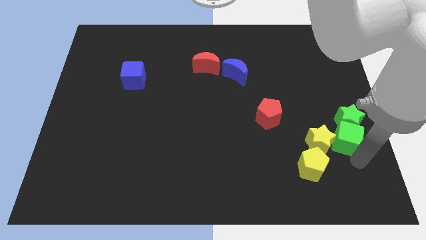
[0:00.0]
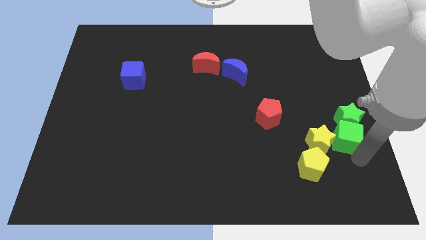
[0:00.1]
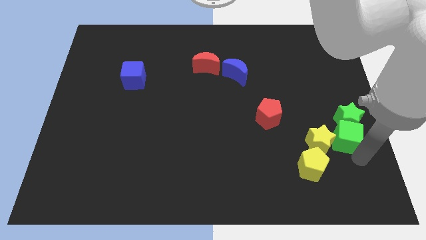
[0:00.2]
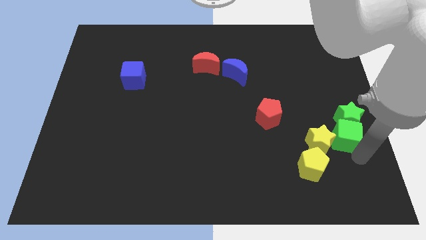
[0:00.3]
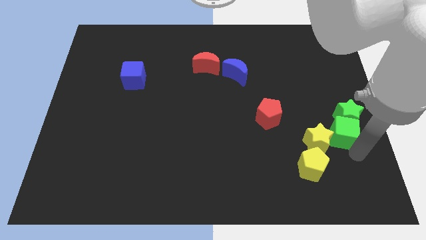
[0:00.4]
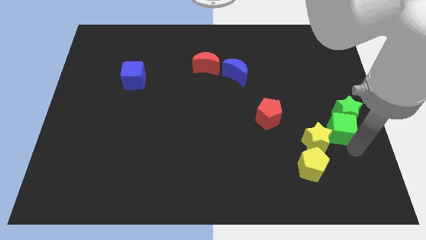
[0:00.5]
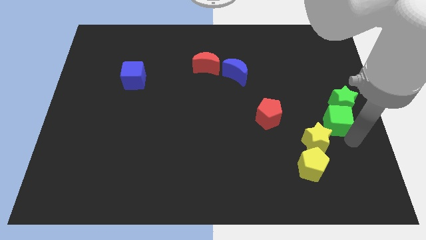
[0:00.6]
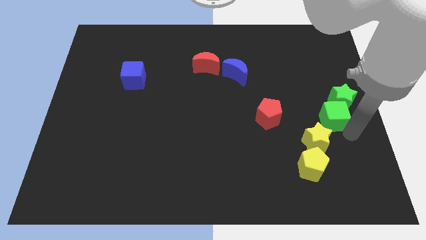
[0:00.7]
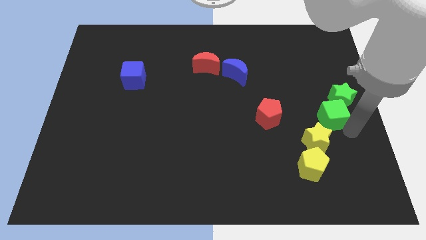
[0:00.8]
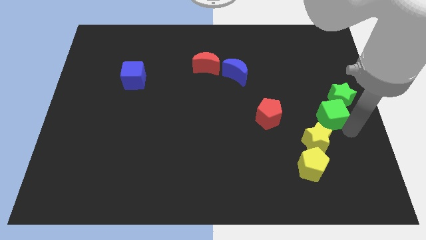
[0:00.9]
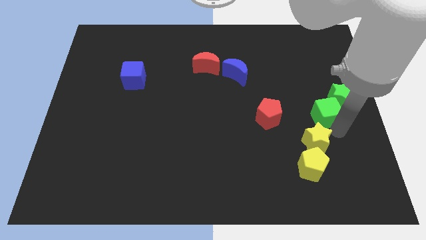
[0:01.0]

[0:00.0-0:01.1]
push the green cube along with the green star slightly to the top

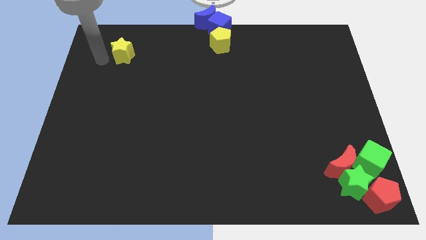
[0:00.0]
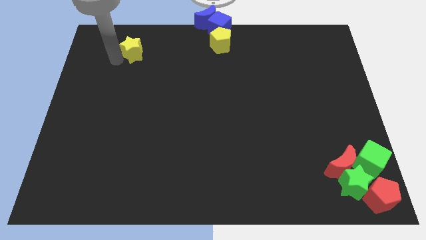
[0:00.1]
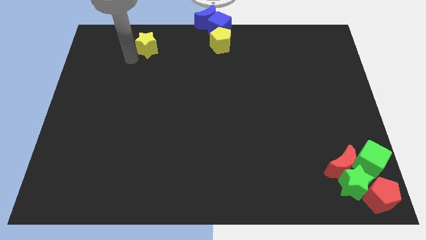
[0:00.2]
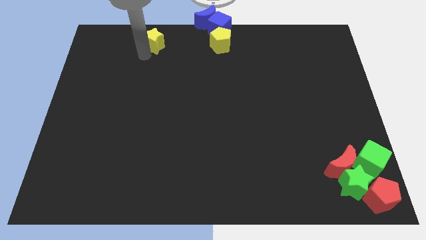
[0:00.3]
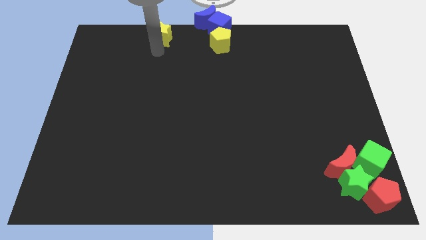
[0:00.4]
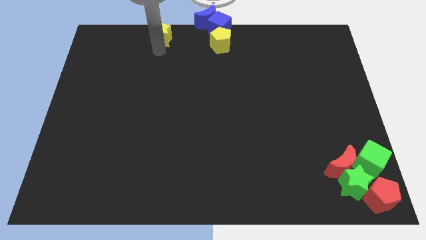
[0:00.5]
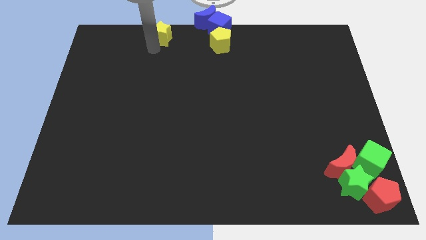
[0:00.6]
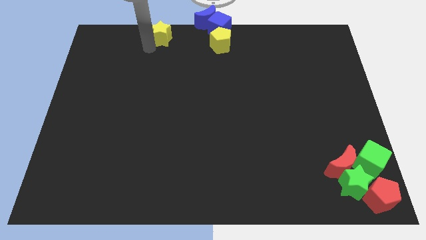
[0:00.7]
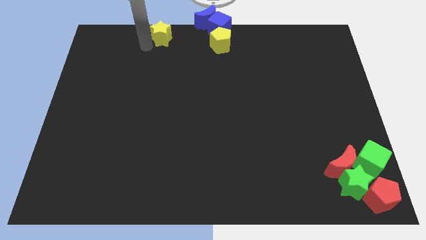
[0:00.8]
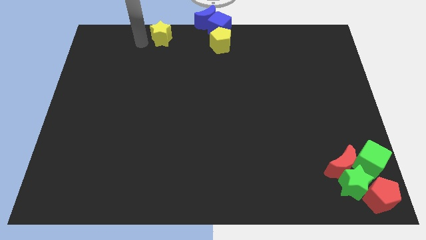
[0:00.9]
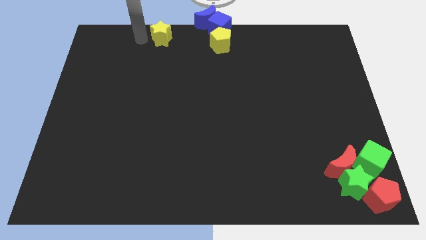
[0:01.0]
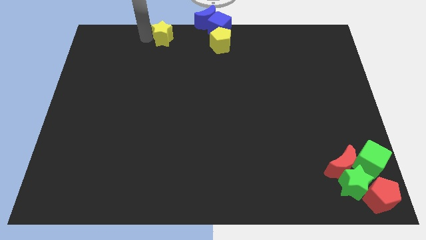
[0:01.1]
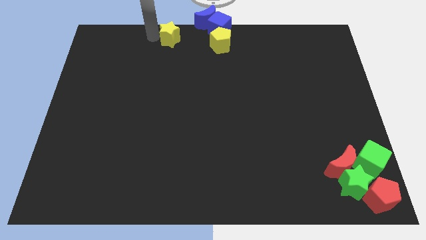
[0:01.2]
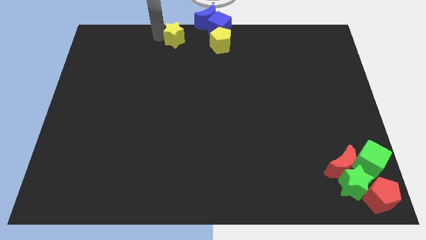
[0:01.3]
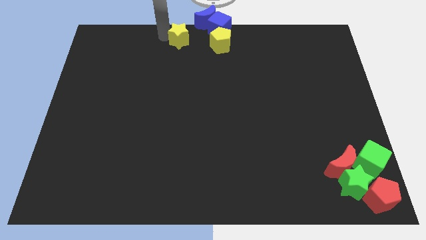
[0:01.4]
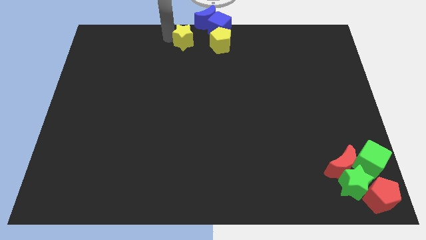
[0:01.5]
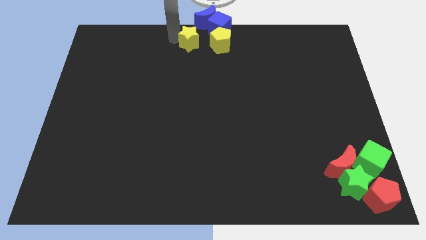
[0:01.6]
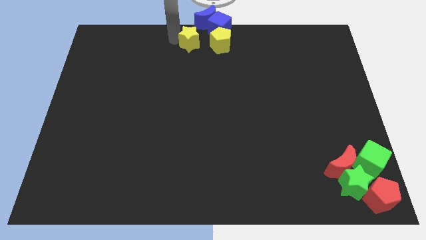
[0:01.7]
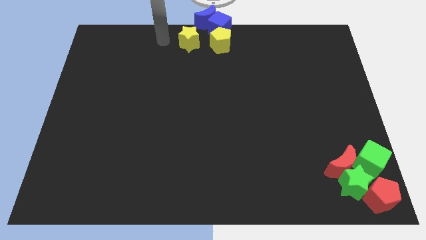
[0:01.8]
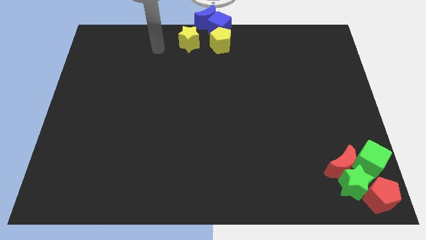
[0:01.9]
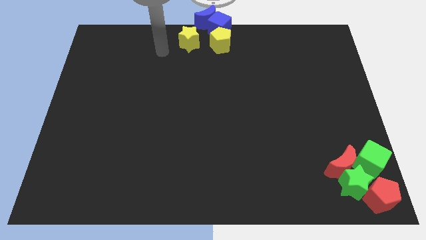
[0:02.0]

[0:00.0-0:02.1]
push the yellow star to the left of the yellow pentagon

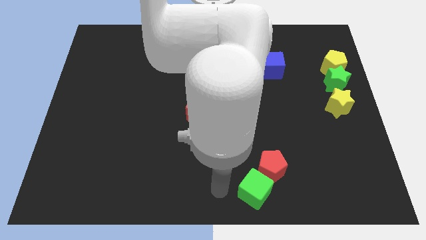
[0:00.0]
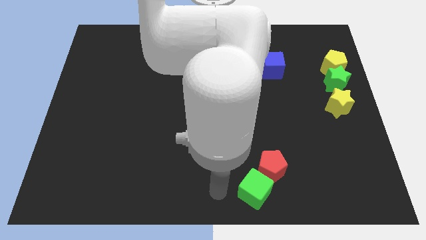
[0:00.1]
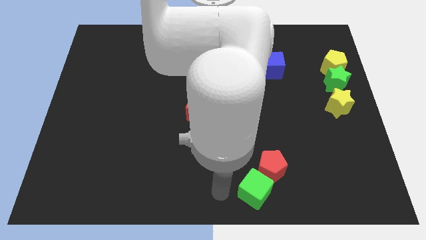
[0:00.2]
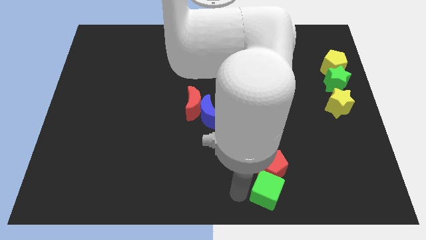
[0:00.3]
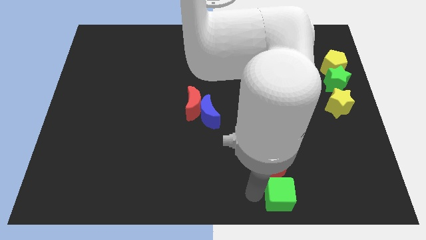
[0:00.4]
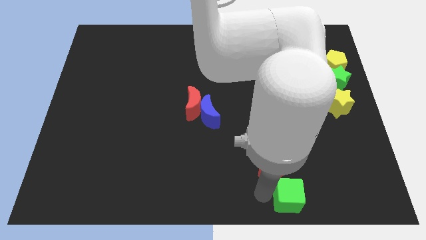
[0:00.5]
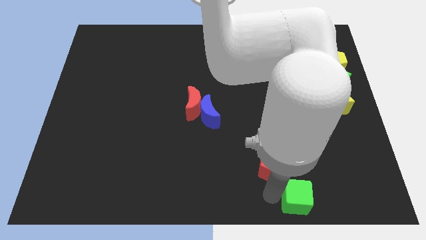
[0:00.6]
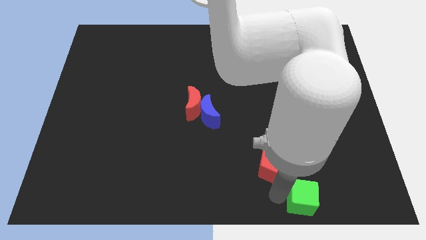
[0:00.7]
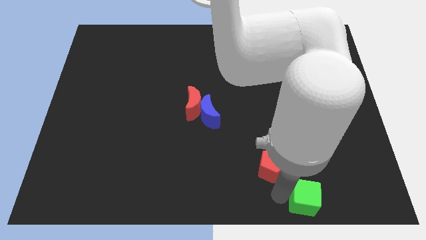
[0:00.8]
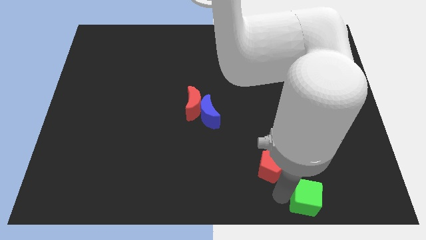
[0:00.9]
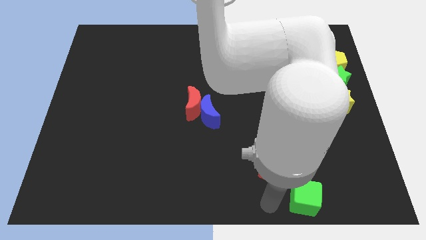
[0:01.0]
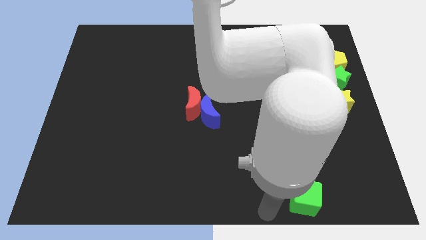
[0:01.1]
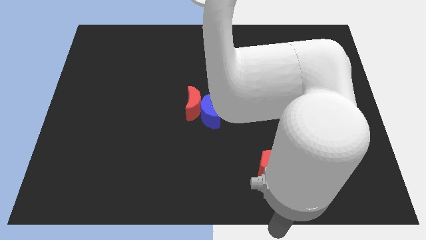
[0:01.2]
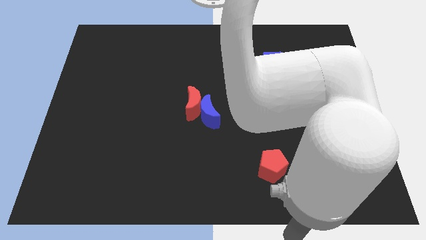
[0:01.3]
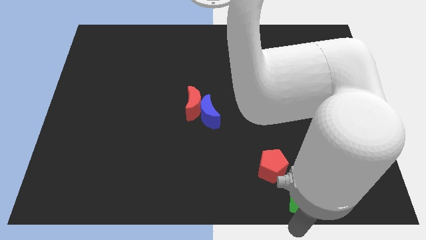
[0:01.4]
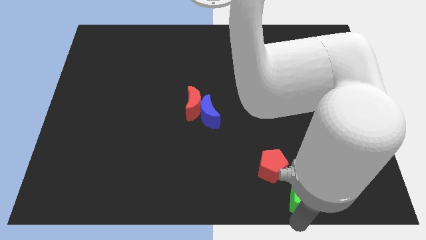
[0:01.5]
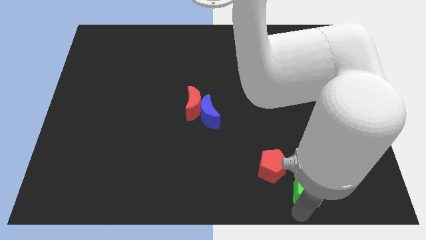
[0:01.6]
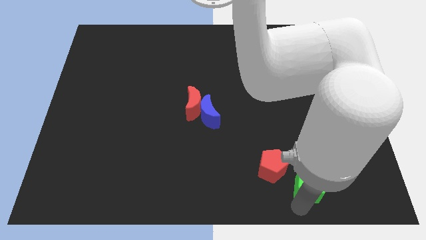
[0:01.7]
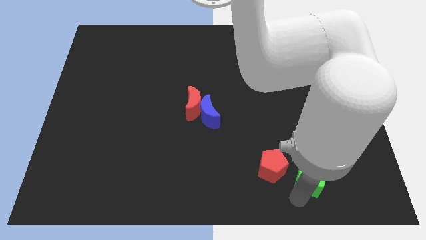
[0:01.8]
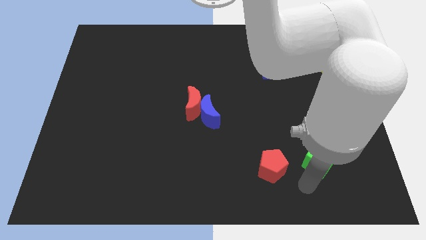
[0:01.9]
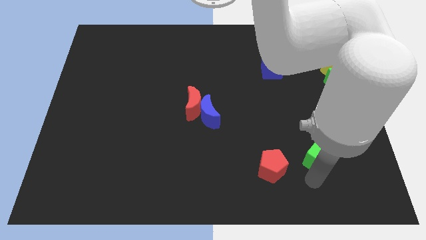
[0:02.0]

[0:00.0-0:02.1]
move the green cube to the right of the red pentagon

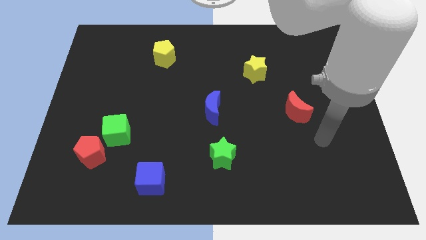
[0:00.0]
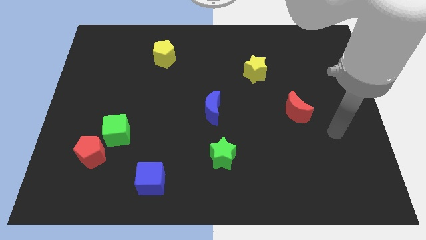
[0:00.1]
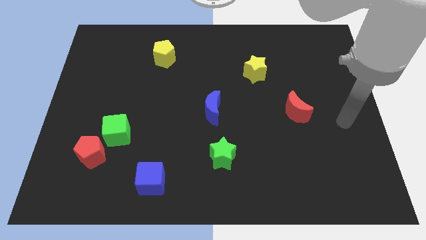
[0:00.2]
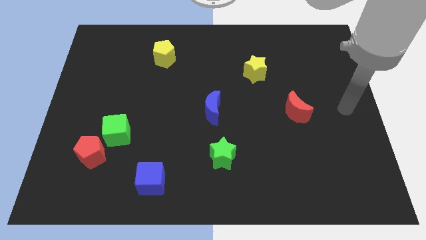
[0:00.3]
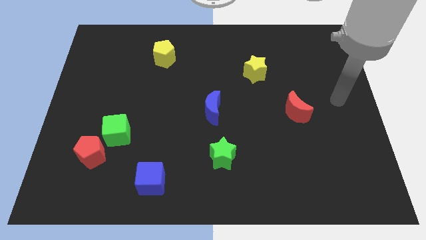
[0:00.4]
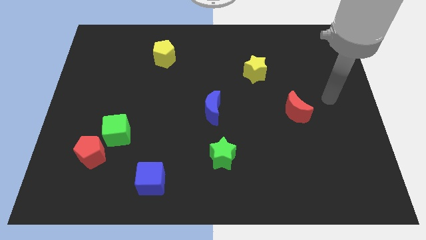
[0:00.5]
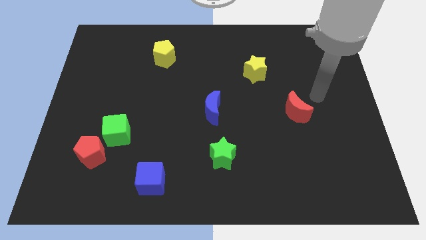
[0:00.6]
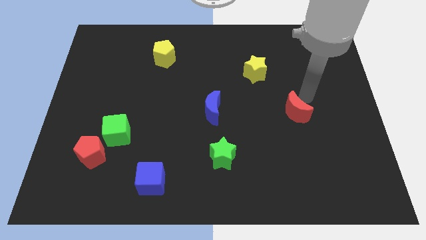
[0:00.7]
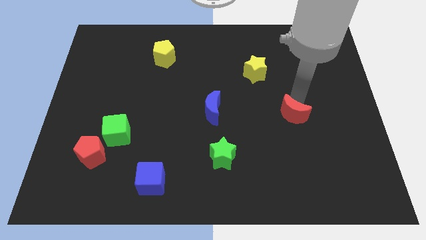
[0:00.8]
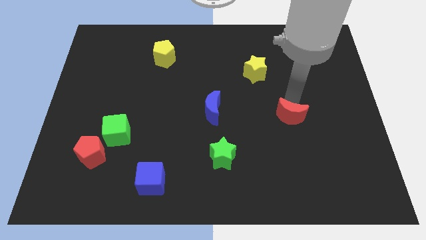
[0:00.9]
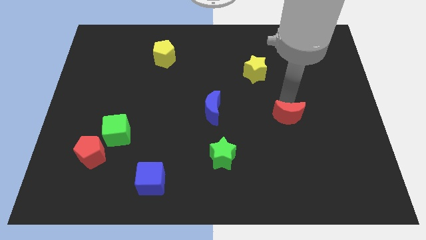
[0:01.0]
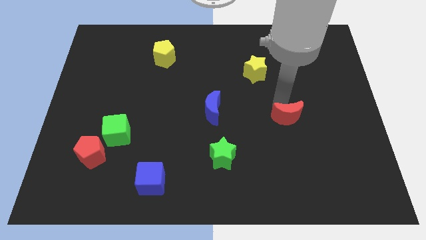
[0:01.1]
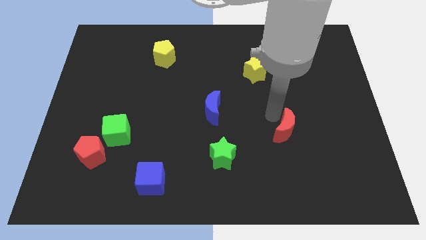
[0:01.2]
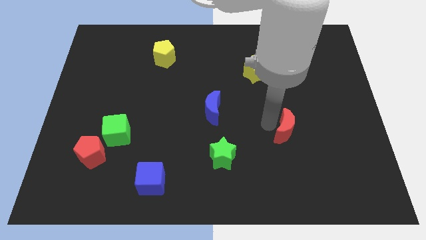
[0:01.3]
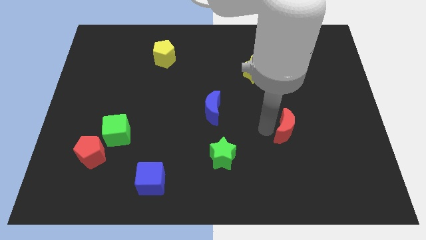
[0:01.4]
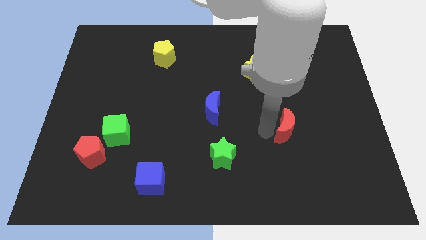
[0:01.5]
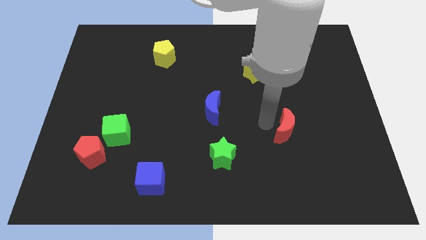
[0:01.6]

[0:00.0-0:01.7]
slide the red moon diagonally on the top right side of the green star

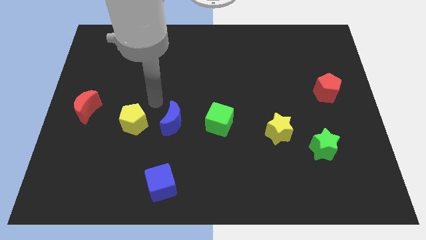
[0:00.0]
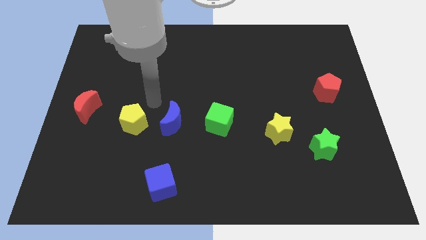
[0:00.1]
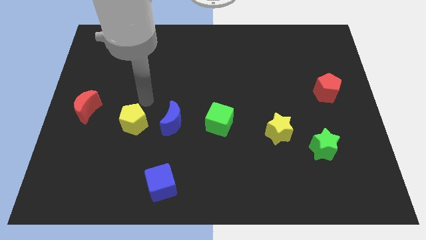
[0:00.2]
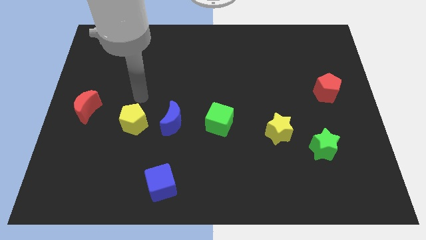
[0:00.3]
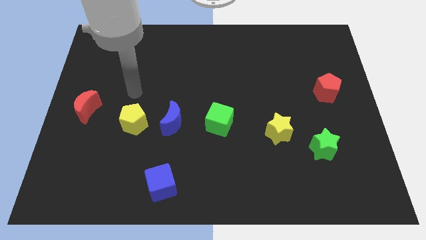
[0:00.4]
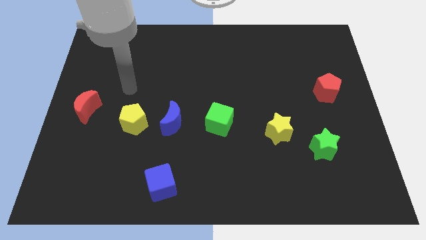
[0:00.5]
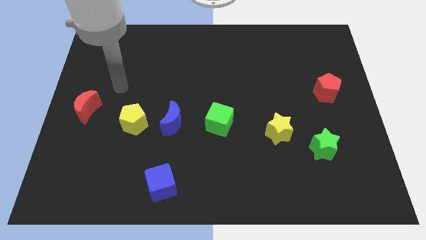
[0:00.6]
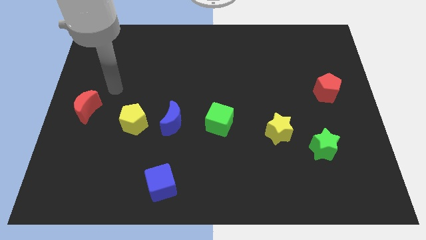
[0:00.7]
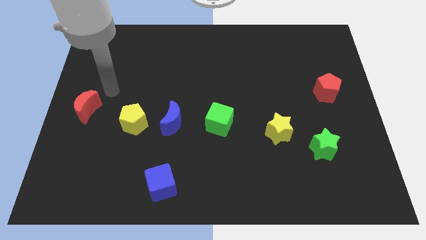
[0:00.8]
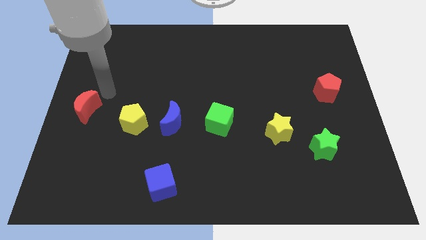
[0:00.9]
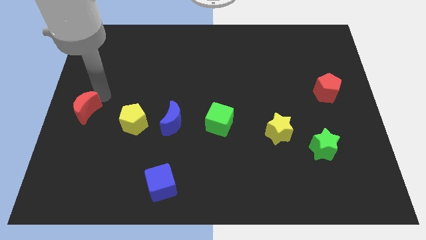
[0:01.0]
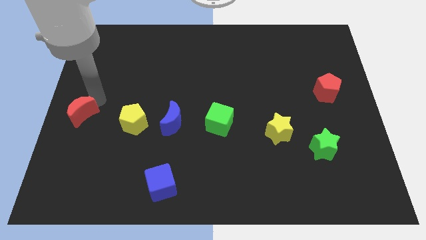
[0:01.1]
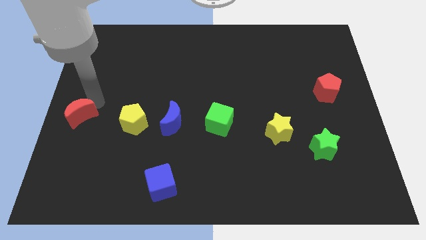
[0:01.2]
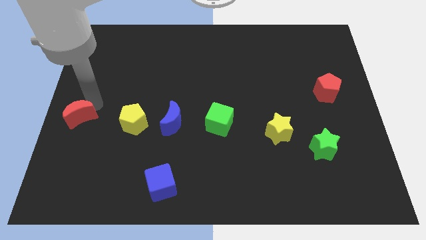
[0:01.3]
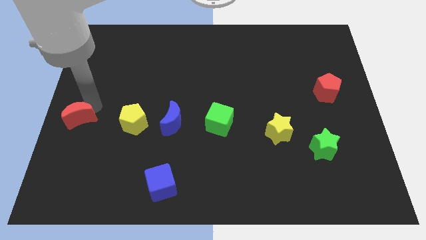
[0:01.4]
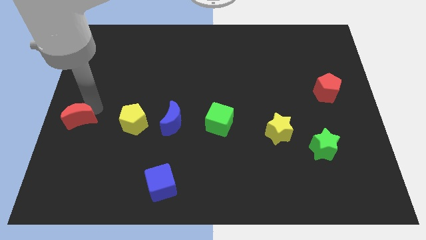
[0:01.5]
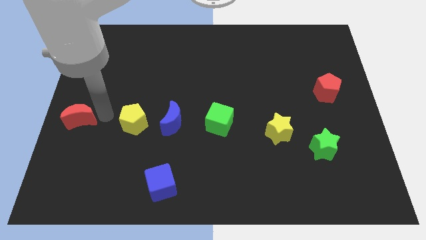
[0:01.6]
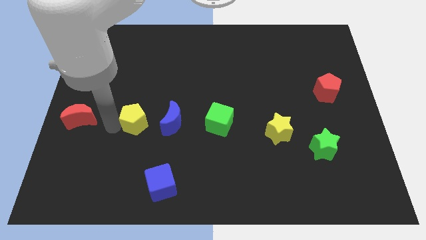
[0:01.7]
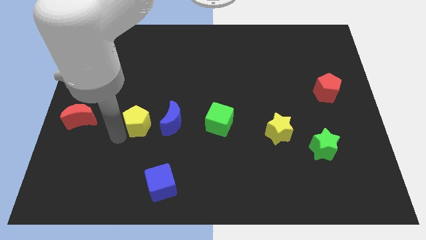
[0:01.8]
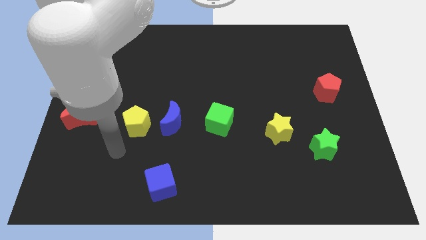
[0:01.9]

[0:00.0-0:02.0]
push the red crescent towards the left center of the board
